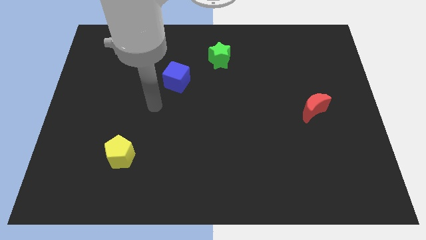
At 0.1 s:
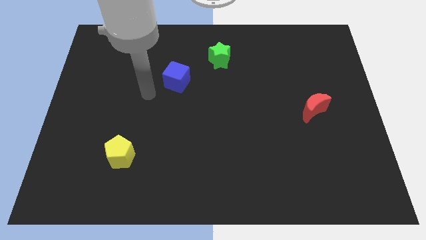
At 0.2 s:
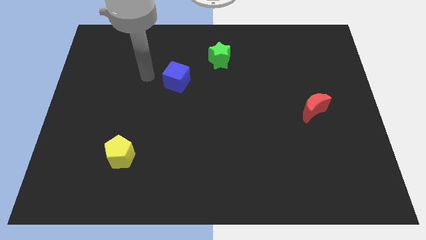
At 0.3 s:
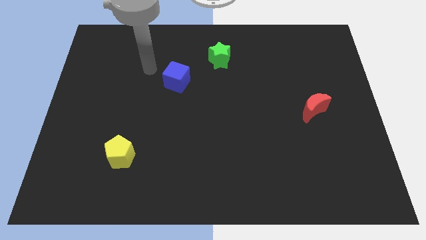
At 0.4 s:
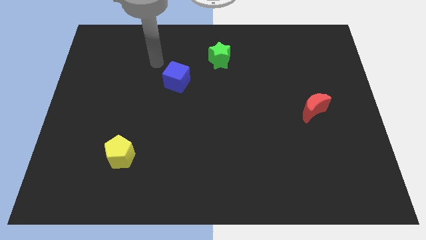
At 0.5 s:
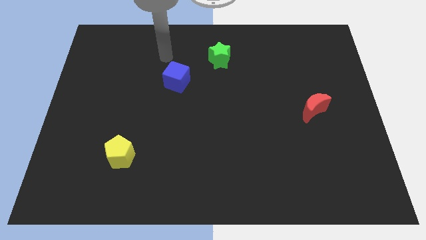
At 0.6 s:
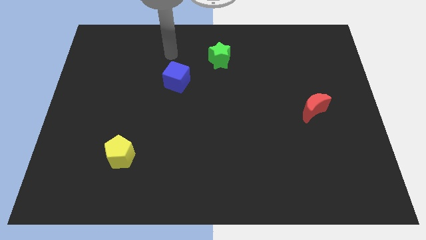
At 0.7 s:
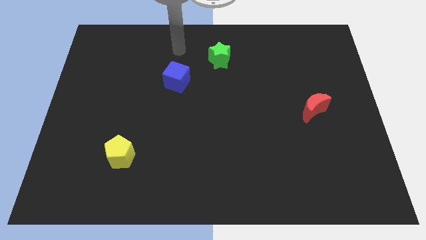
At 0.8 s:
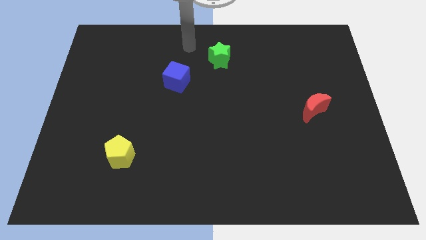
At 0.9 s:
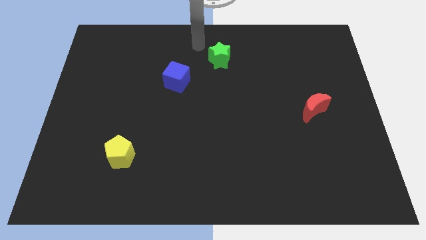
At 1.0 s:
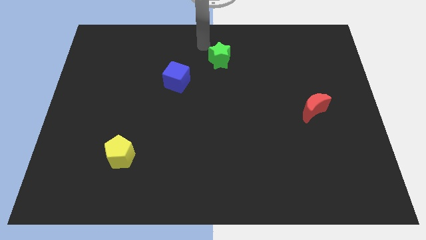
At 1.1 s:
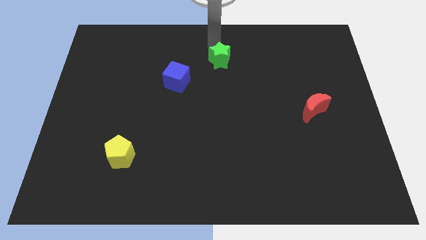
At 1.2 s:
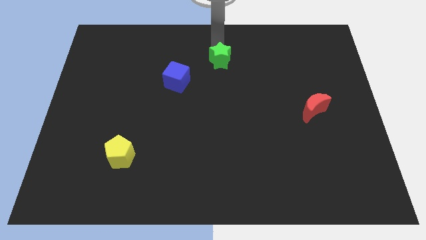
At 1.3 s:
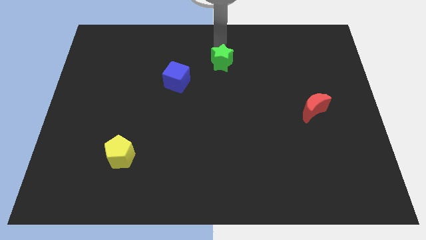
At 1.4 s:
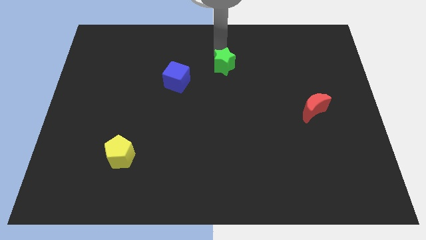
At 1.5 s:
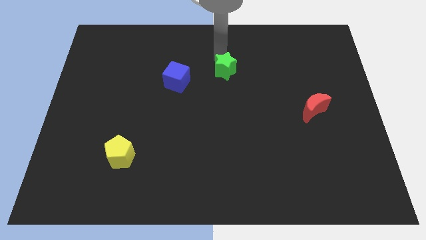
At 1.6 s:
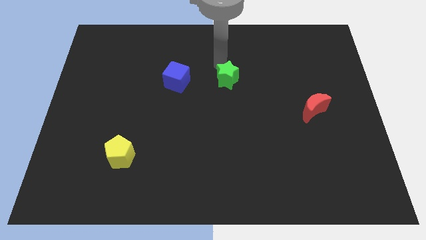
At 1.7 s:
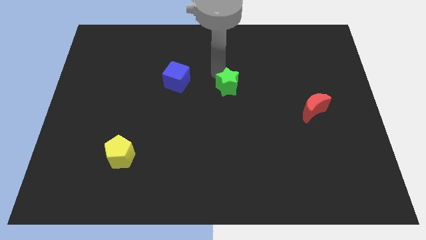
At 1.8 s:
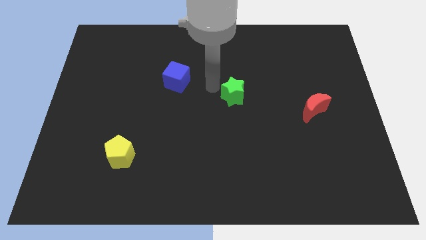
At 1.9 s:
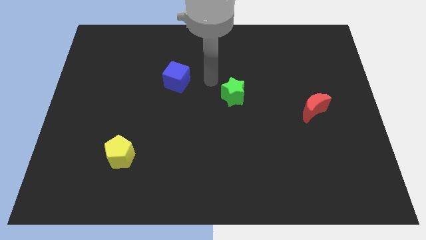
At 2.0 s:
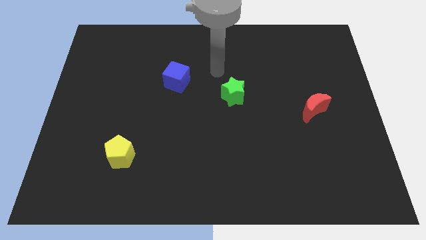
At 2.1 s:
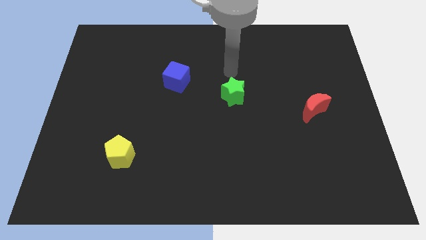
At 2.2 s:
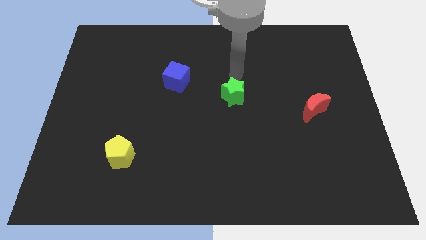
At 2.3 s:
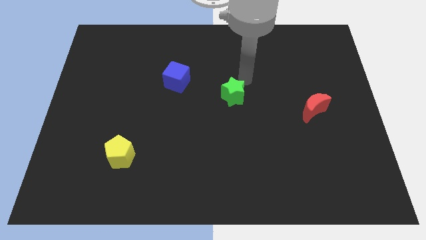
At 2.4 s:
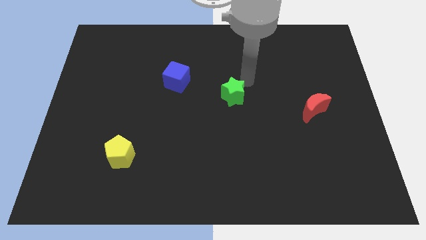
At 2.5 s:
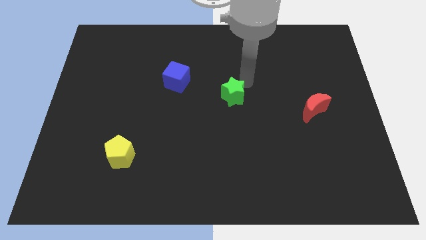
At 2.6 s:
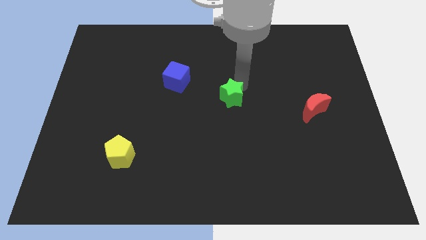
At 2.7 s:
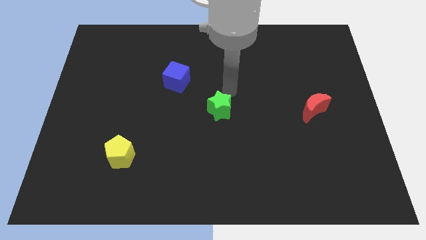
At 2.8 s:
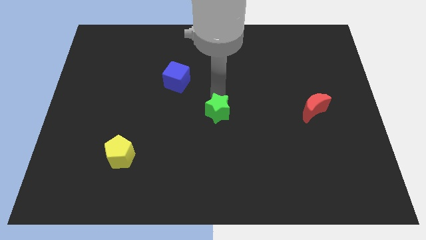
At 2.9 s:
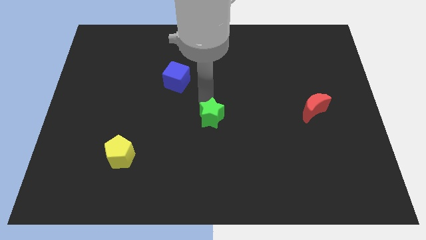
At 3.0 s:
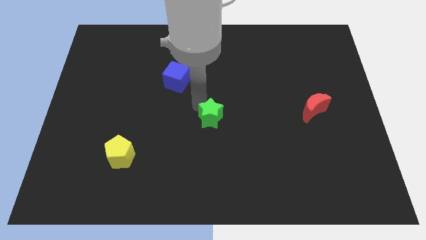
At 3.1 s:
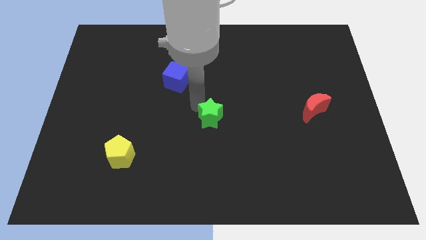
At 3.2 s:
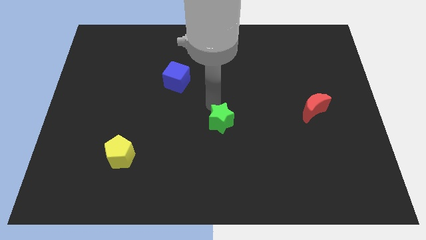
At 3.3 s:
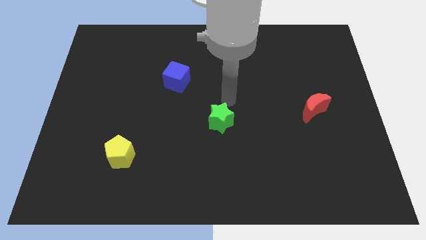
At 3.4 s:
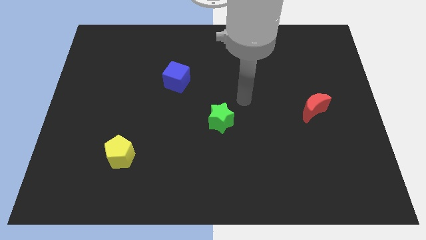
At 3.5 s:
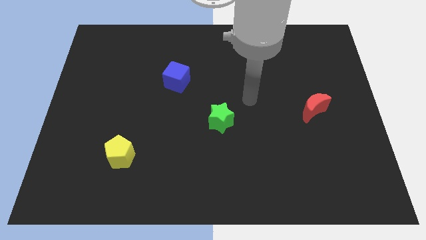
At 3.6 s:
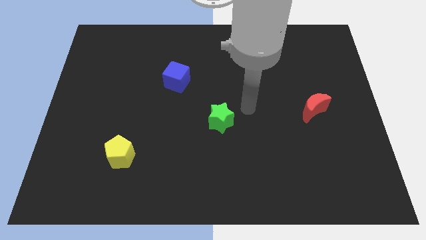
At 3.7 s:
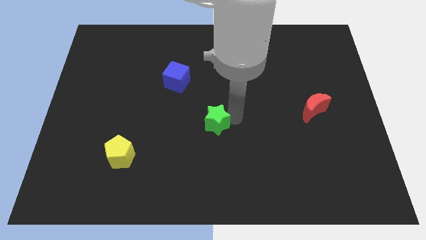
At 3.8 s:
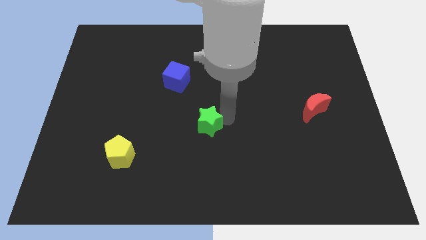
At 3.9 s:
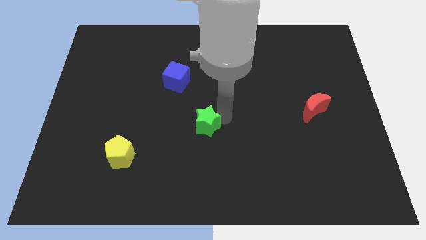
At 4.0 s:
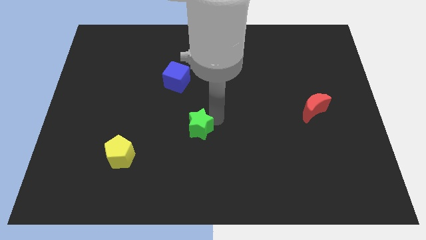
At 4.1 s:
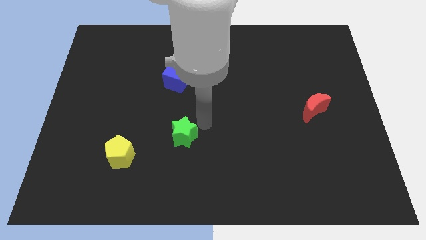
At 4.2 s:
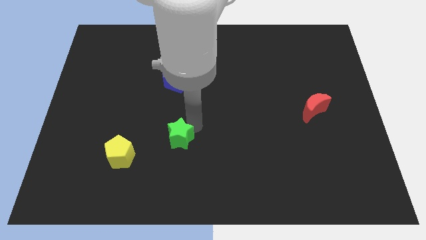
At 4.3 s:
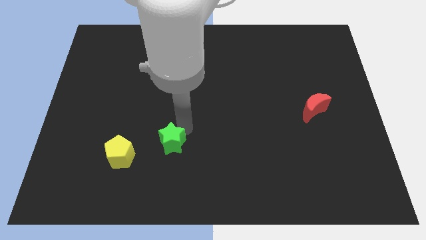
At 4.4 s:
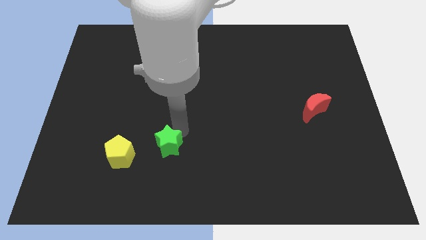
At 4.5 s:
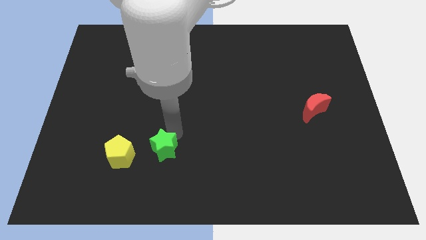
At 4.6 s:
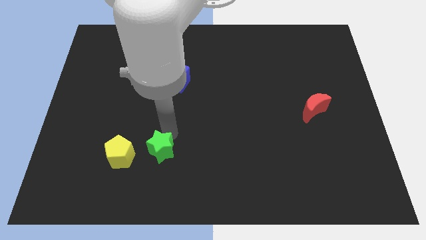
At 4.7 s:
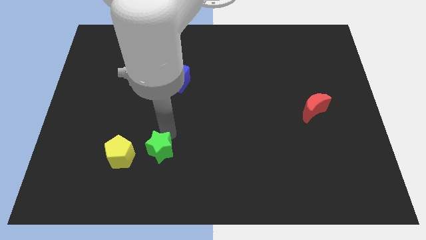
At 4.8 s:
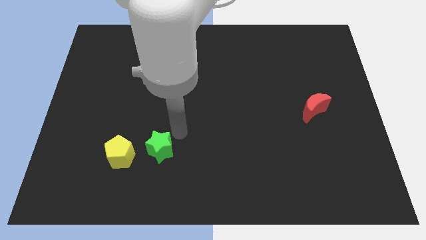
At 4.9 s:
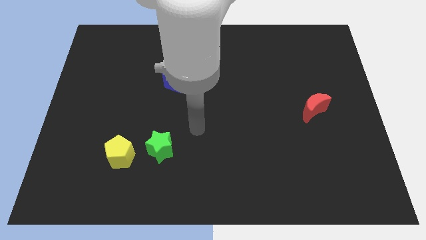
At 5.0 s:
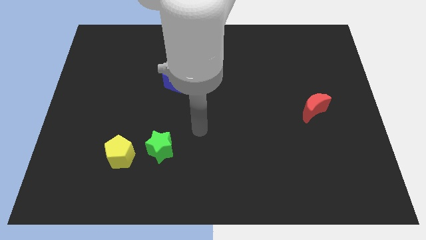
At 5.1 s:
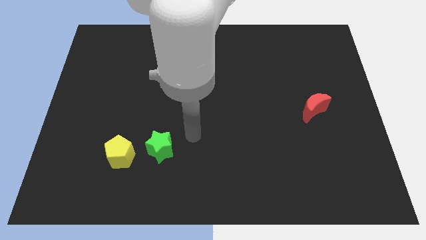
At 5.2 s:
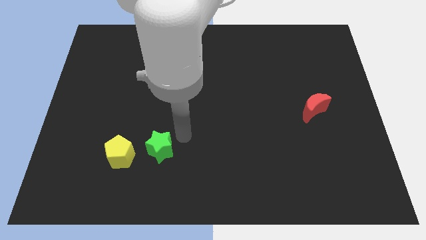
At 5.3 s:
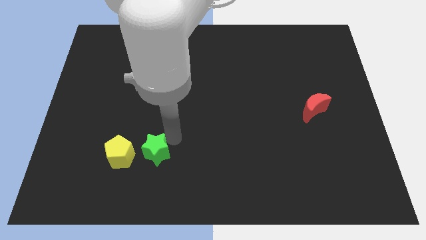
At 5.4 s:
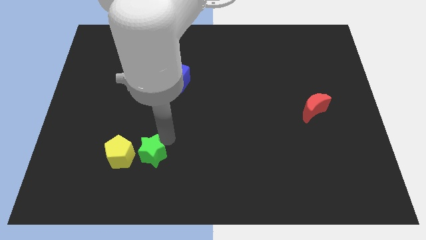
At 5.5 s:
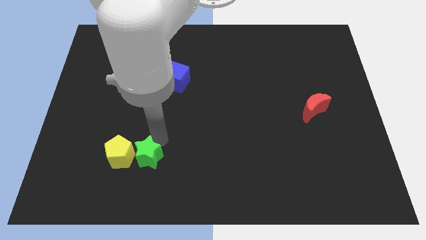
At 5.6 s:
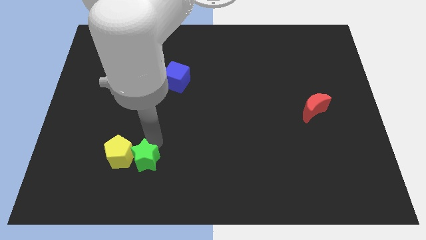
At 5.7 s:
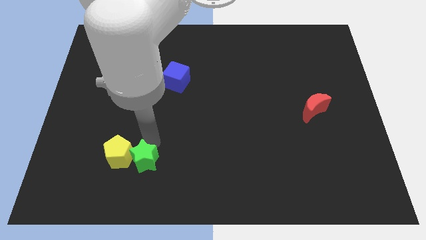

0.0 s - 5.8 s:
put the green star next to the pentagon

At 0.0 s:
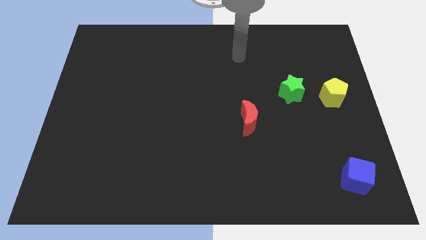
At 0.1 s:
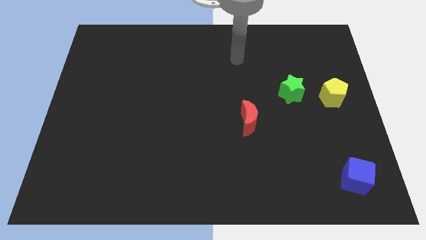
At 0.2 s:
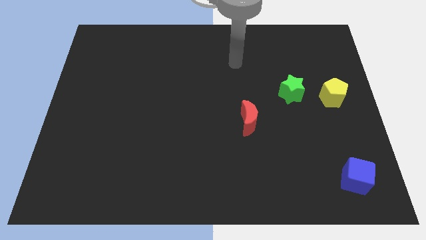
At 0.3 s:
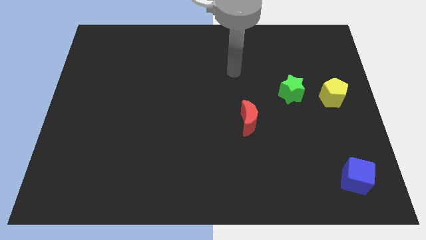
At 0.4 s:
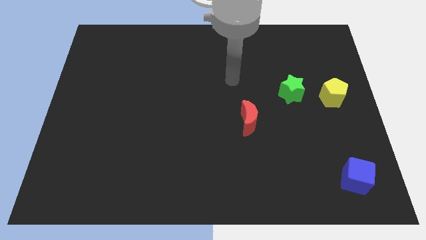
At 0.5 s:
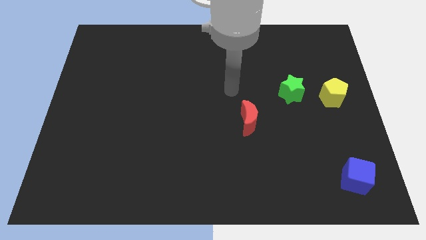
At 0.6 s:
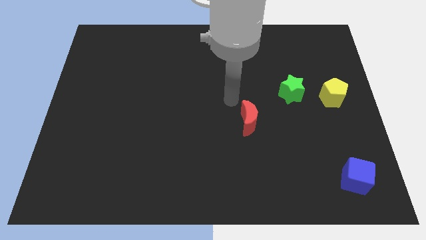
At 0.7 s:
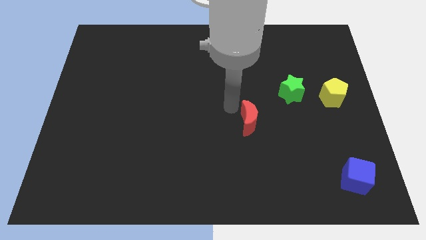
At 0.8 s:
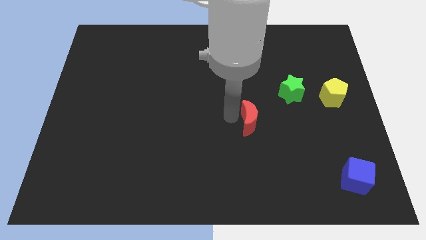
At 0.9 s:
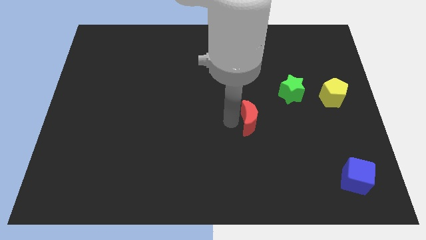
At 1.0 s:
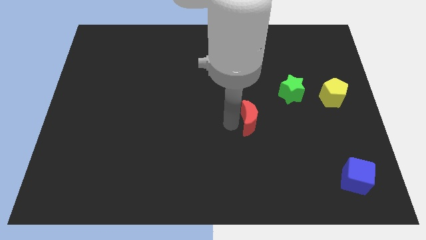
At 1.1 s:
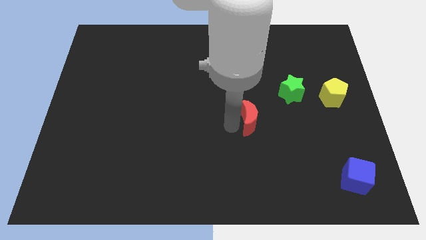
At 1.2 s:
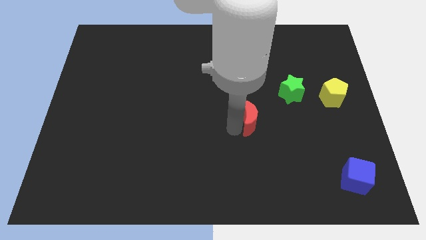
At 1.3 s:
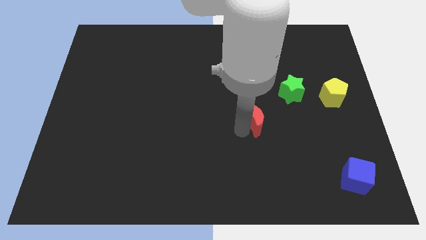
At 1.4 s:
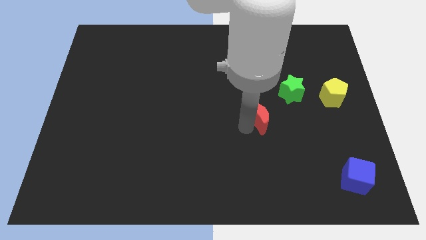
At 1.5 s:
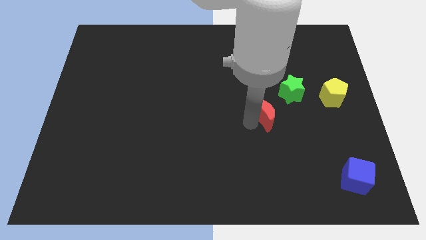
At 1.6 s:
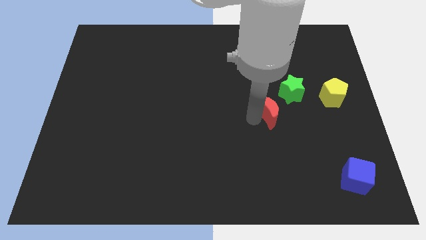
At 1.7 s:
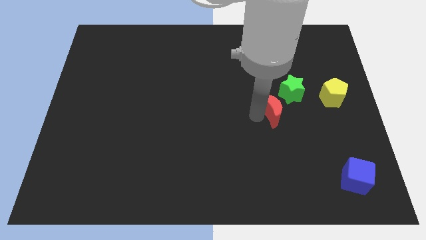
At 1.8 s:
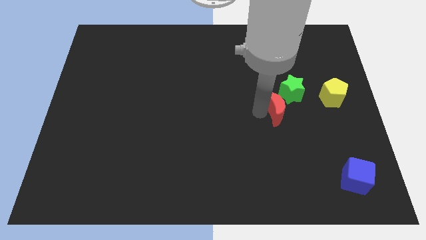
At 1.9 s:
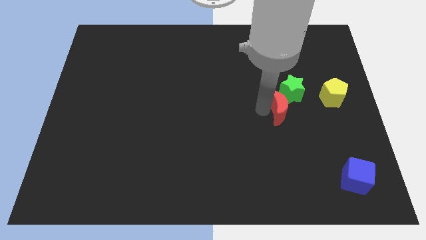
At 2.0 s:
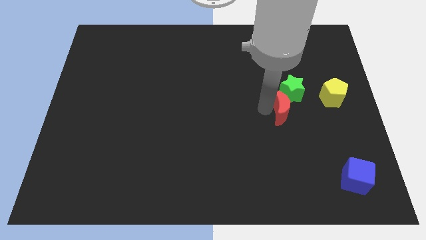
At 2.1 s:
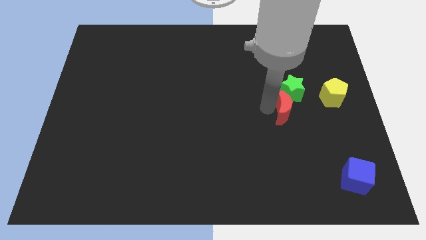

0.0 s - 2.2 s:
move the red block next to the green star

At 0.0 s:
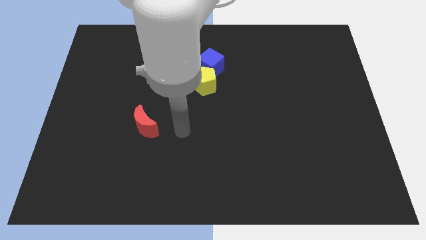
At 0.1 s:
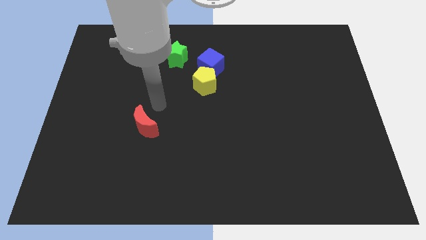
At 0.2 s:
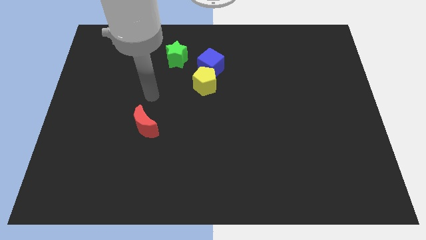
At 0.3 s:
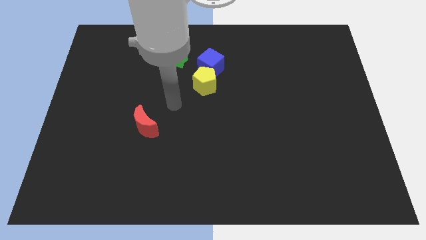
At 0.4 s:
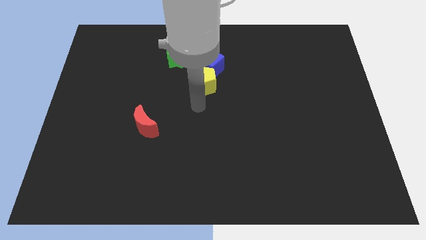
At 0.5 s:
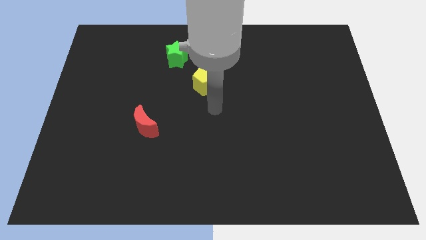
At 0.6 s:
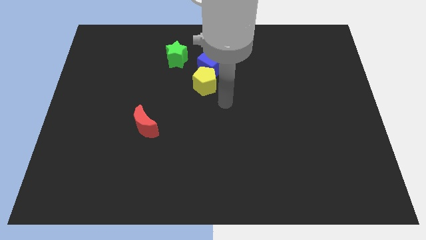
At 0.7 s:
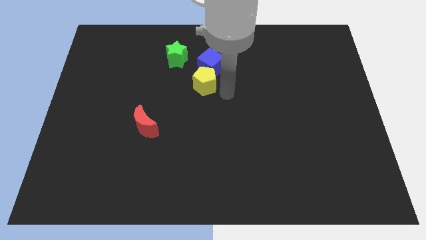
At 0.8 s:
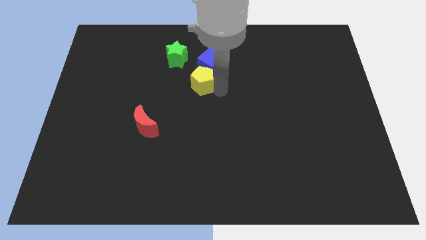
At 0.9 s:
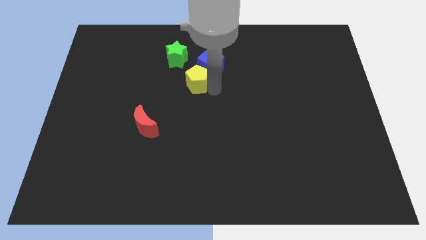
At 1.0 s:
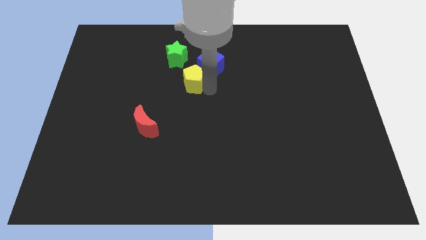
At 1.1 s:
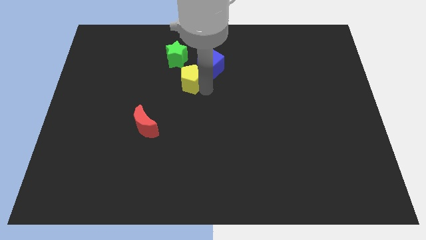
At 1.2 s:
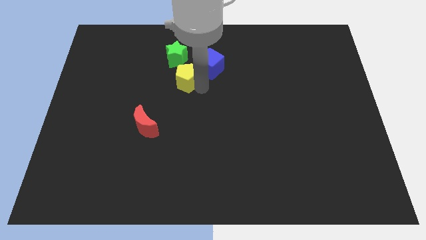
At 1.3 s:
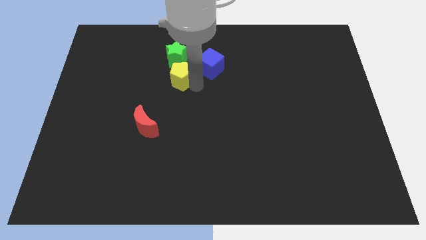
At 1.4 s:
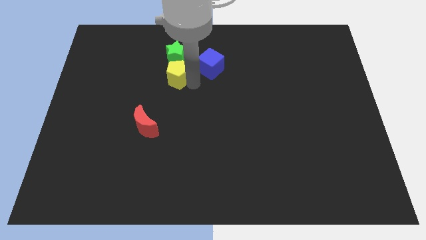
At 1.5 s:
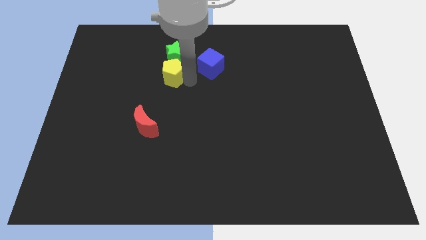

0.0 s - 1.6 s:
push the yellow block to the green block
